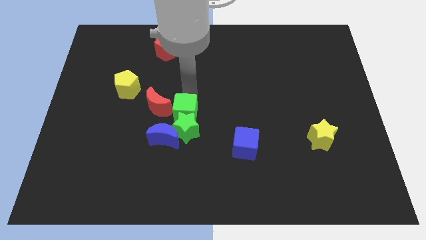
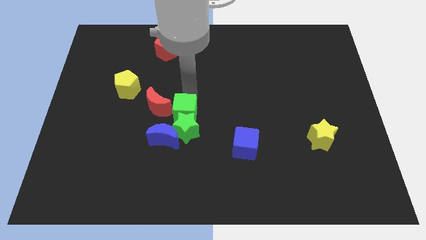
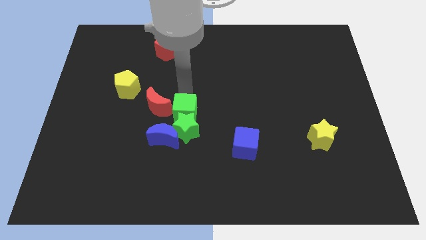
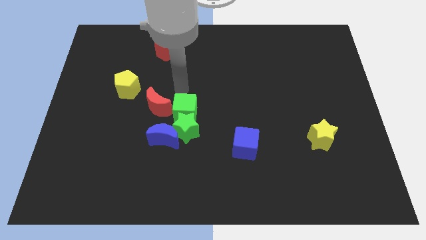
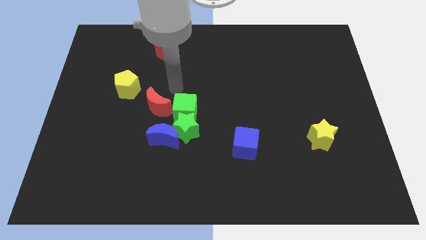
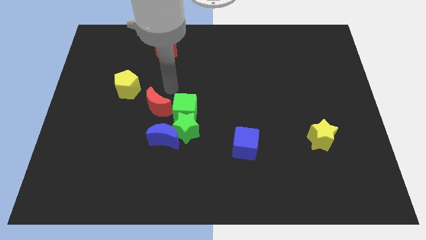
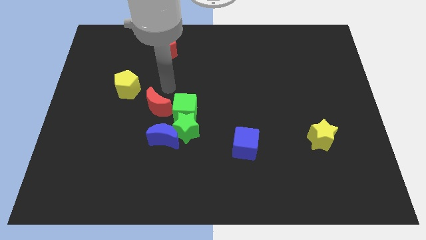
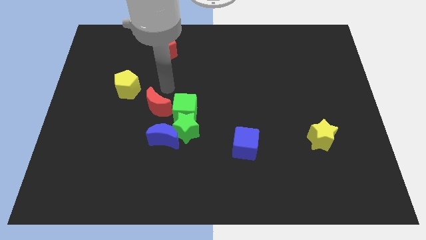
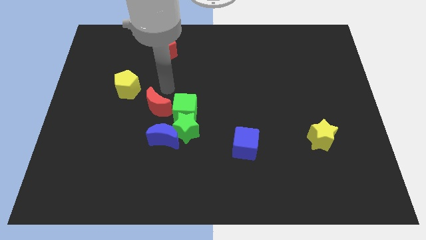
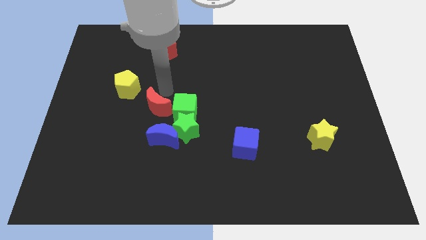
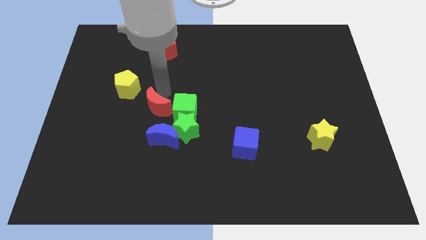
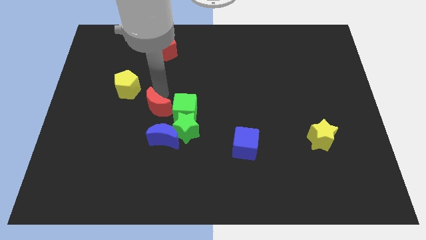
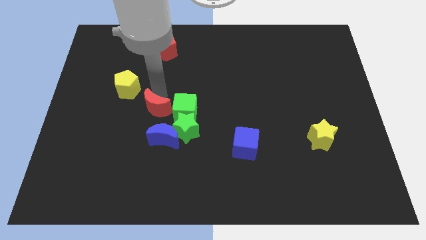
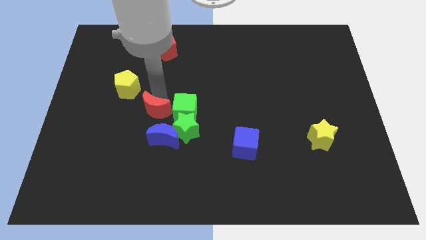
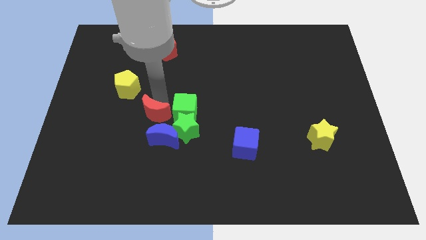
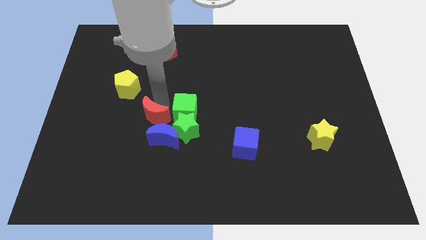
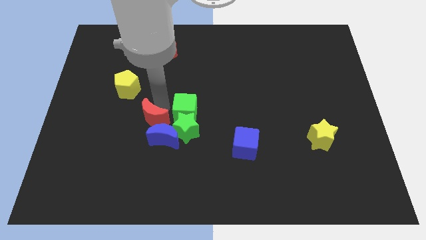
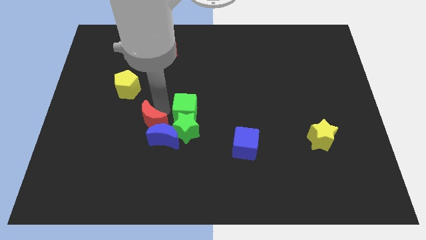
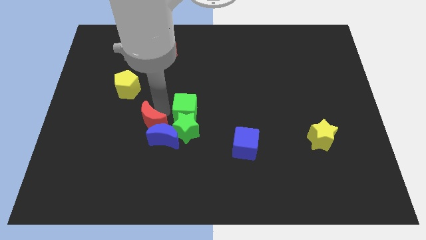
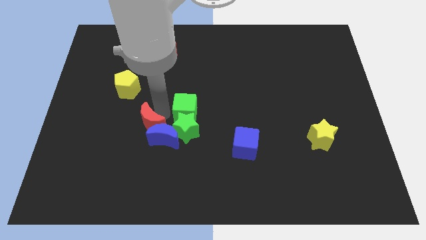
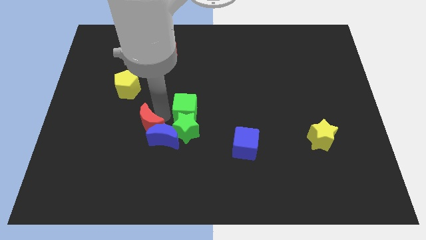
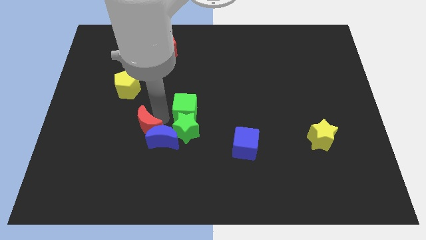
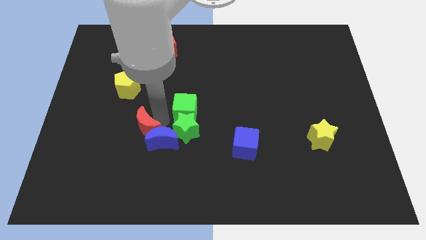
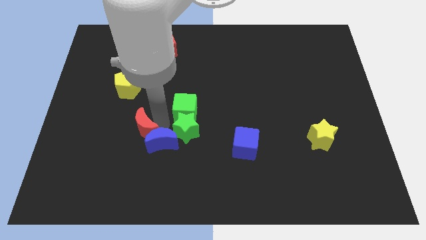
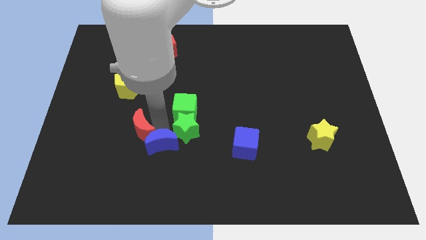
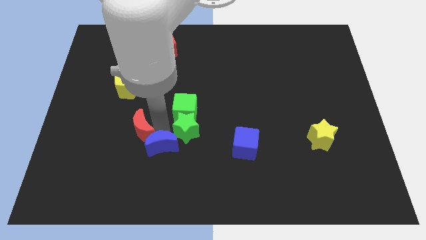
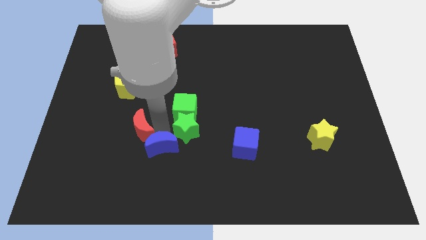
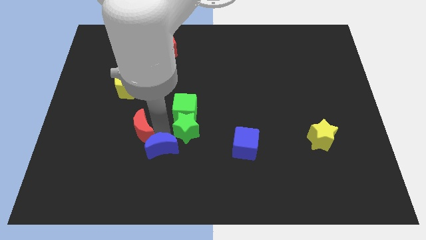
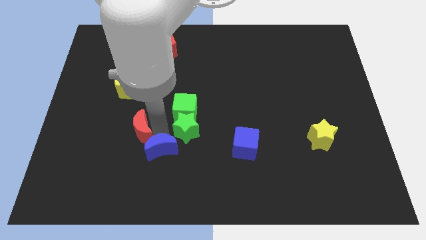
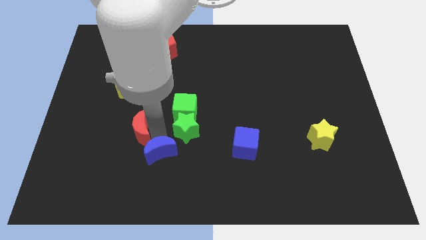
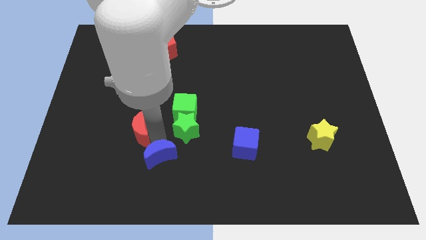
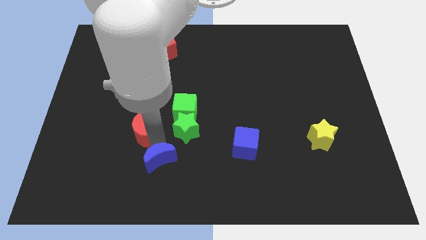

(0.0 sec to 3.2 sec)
touch blue crescent with red crescent

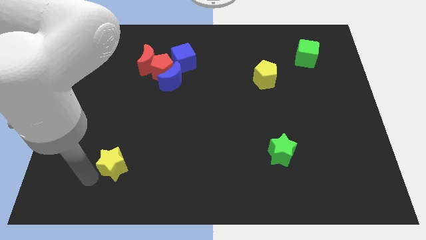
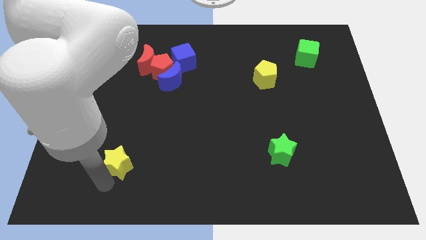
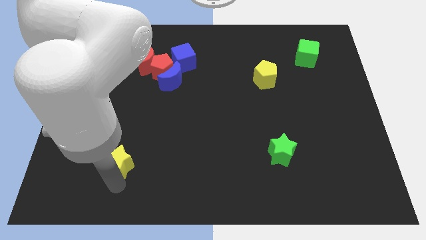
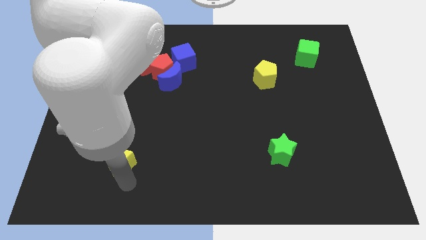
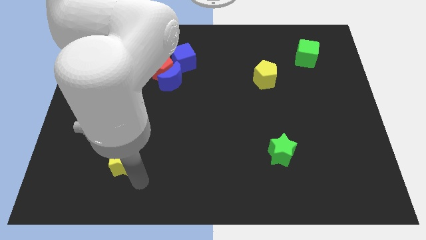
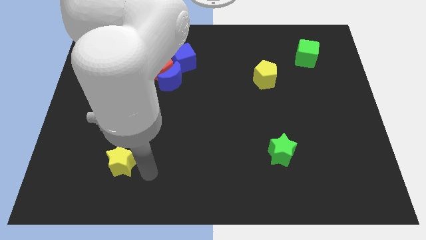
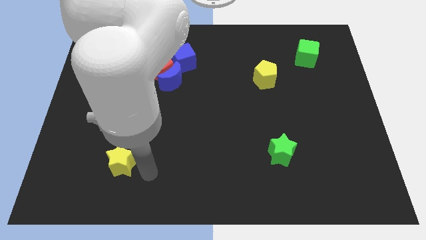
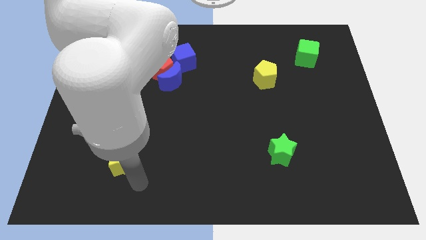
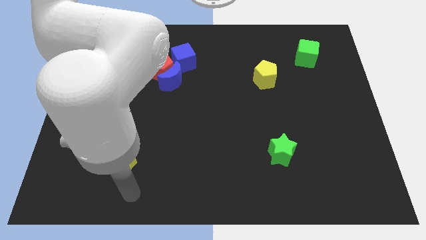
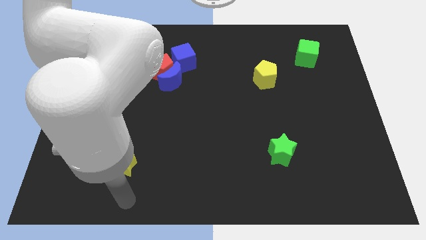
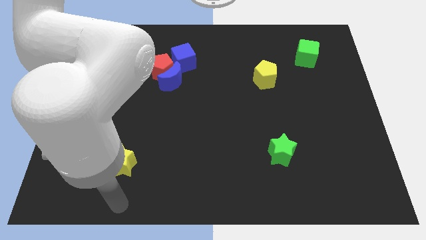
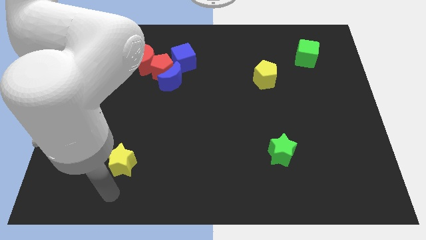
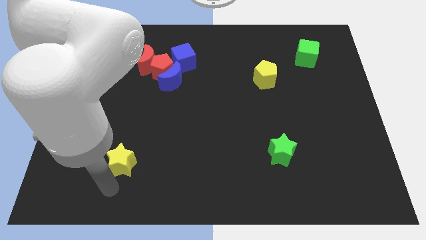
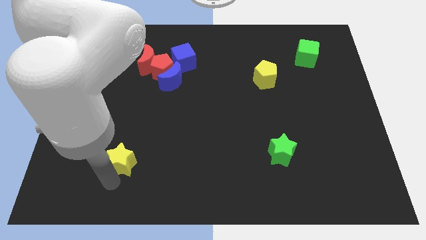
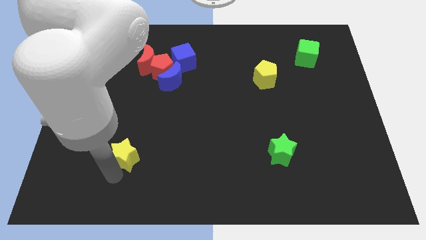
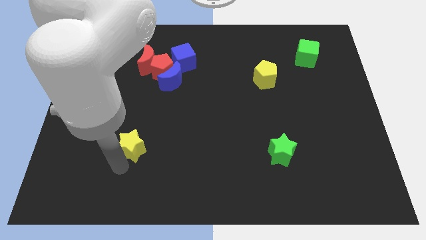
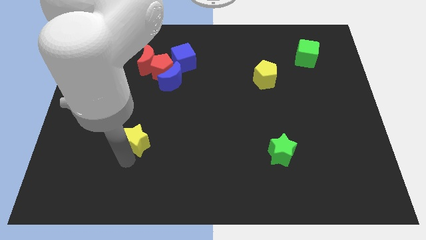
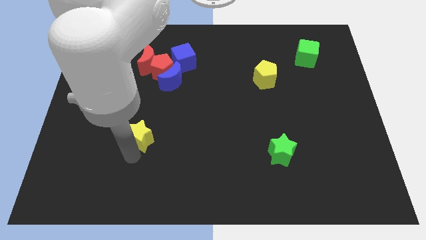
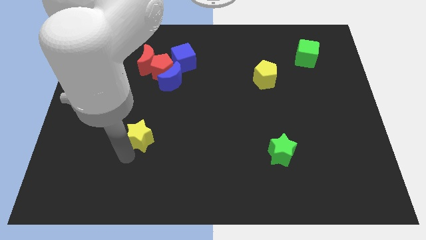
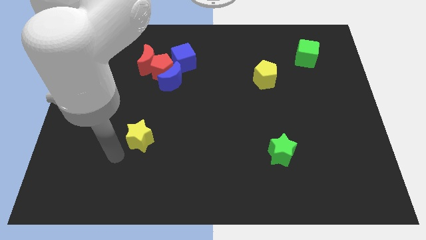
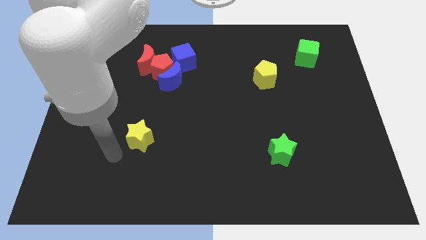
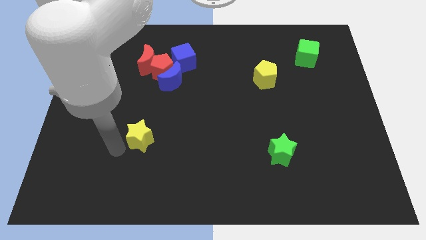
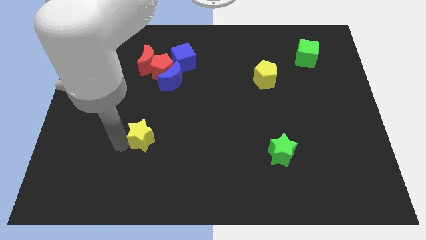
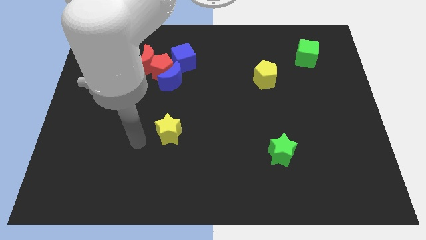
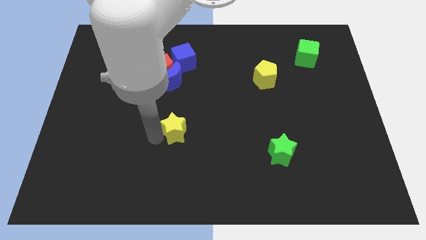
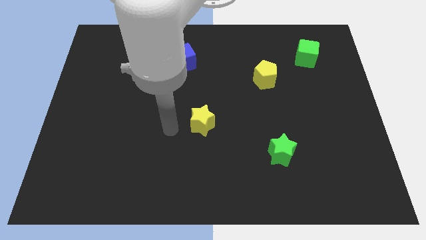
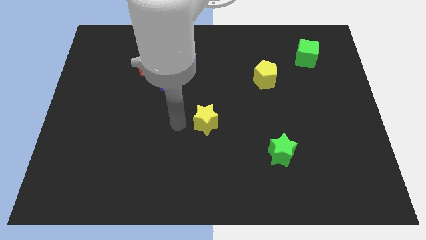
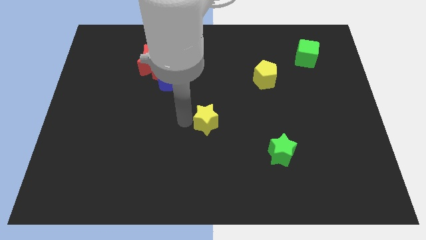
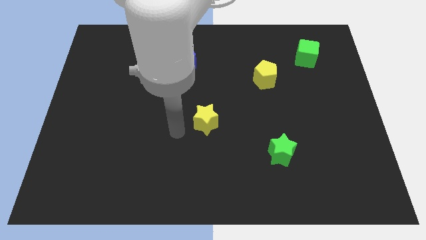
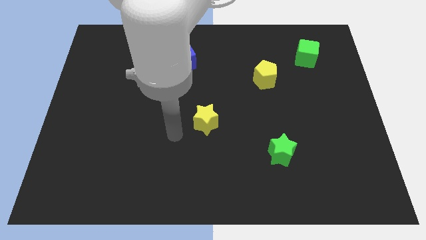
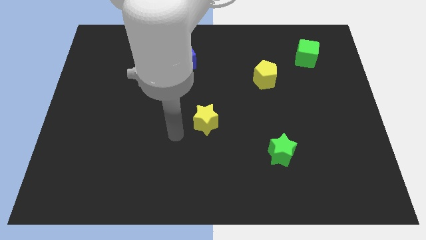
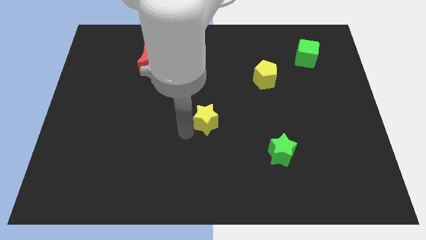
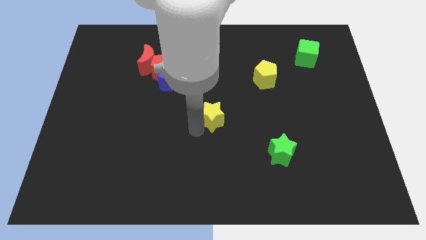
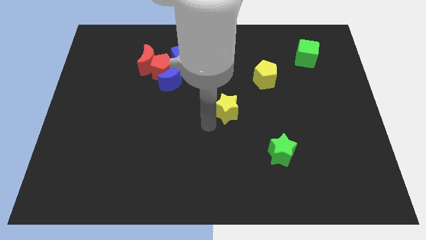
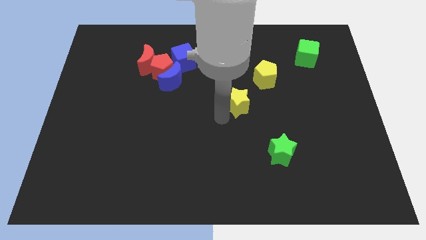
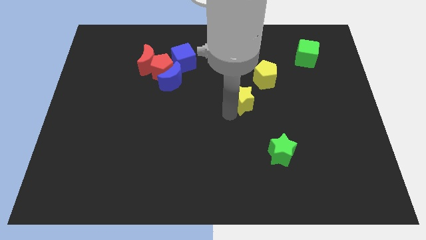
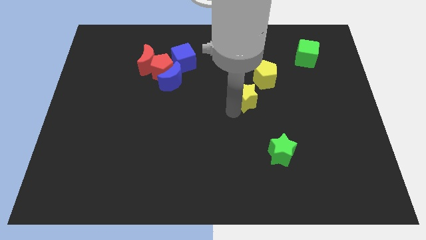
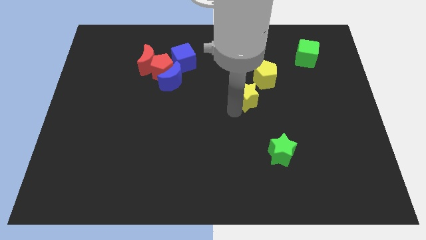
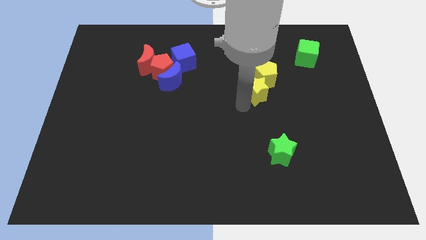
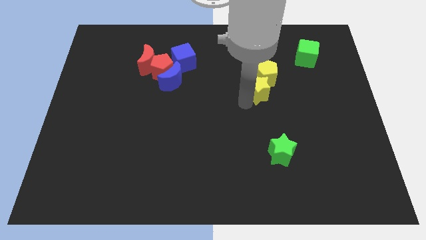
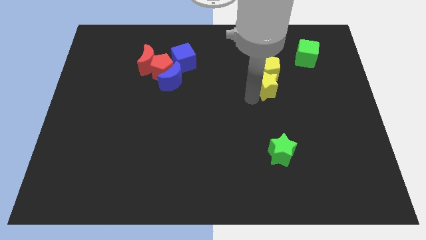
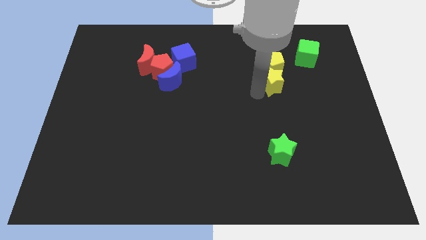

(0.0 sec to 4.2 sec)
push the yellow star into the yellow pentagon

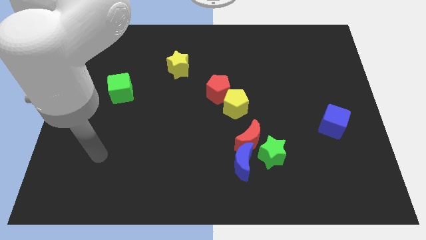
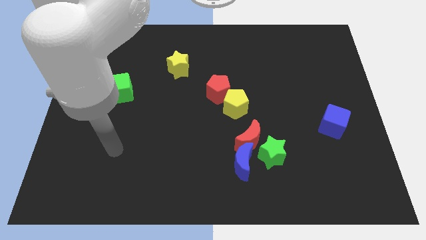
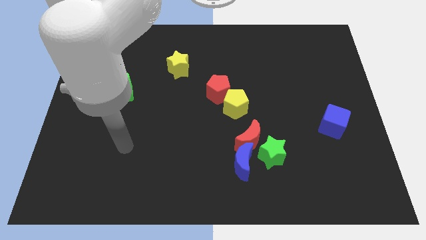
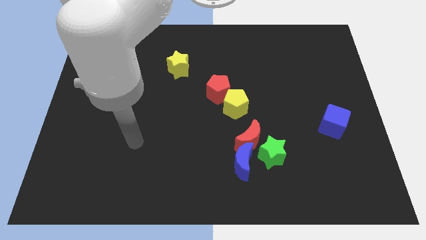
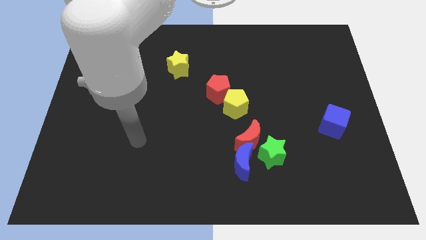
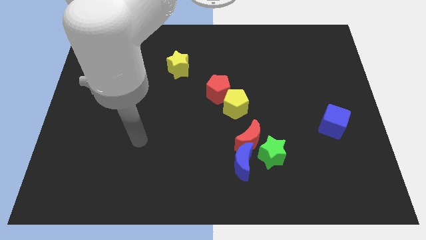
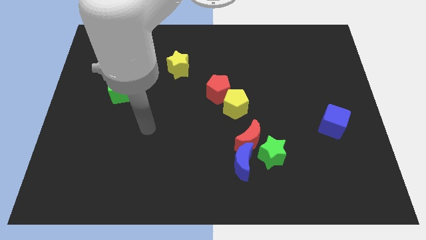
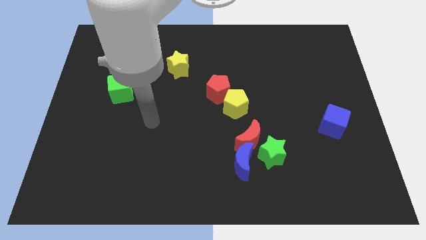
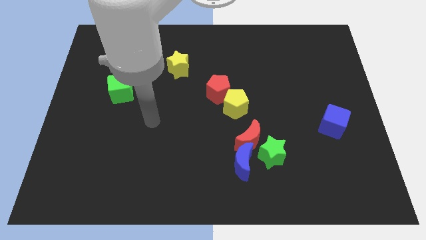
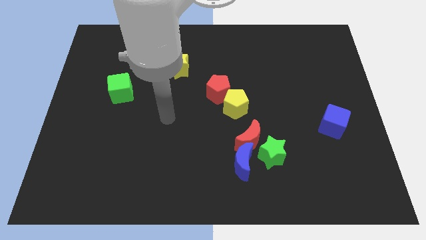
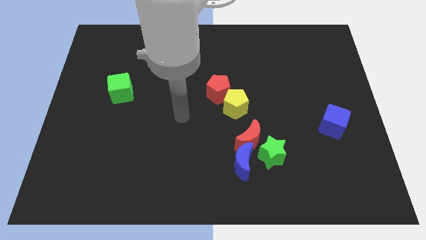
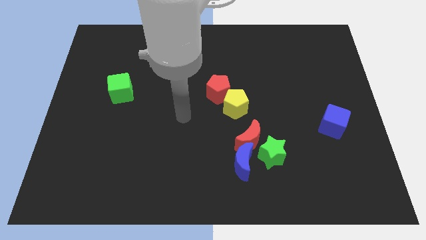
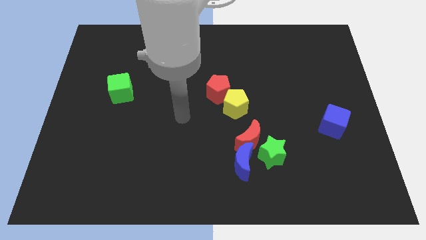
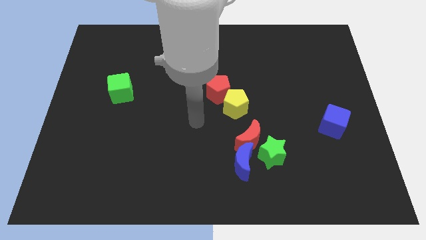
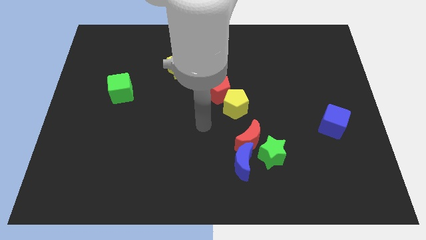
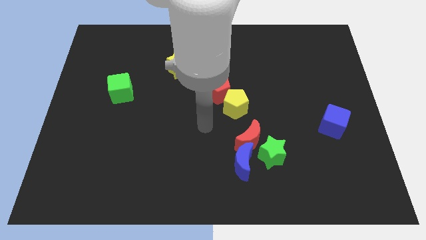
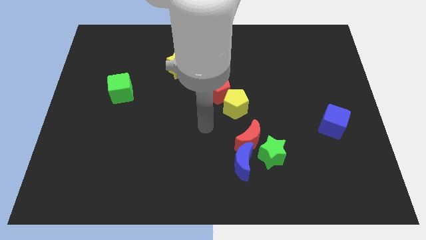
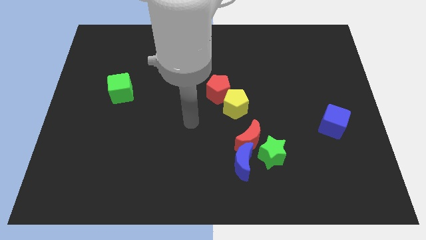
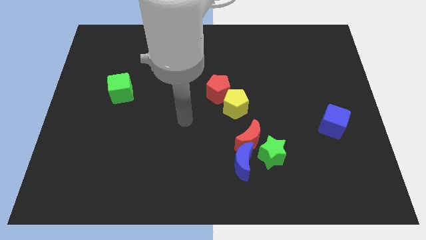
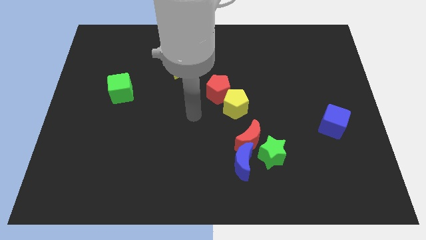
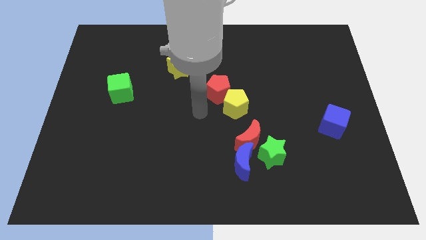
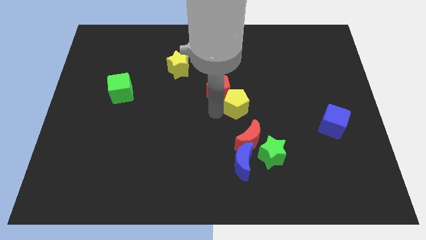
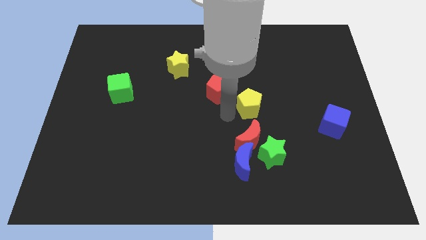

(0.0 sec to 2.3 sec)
move the yellow pentagon diagonal to the red pentagon
